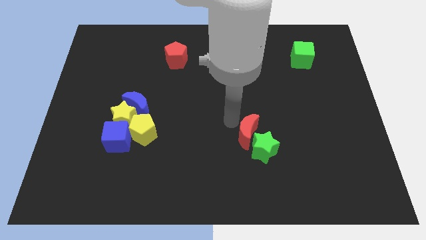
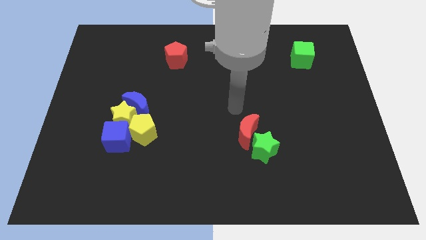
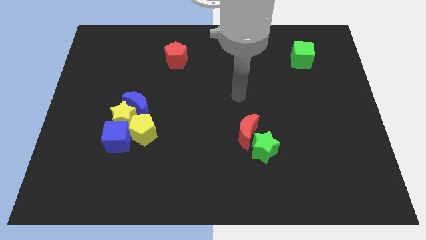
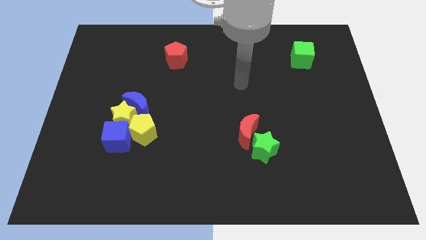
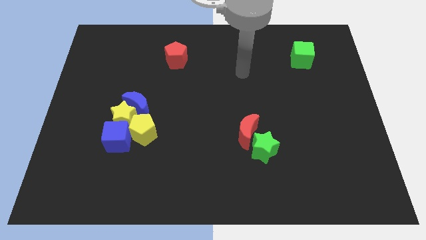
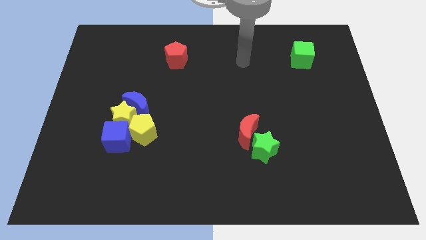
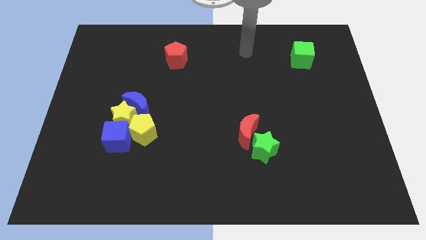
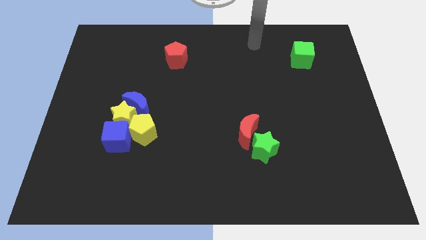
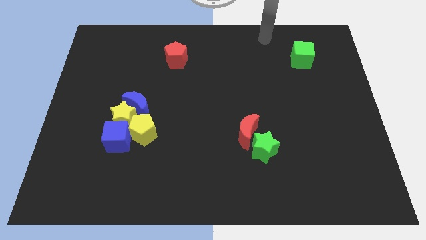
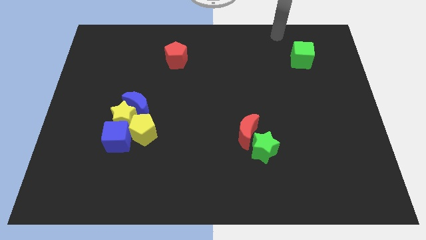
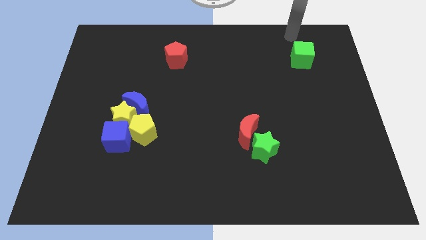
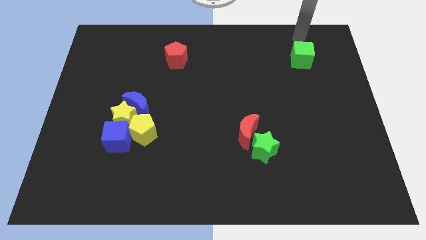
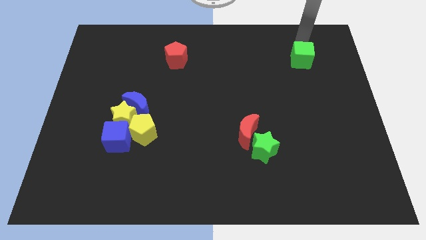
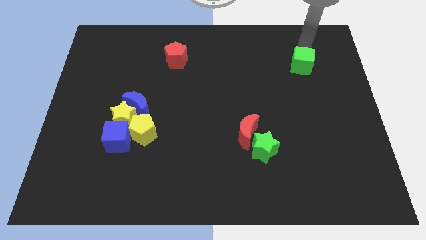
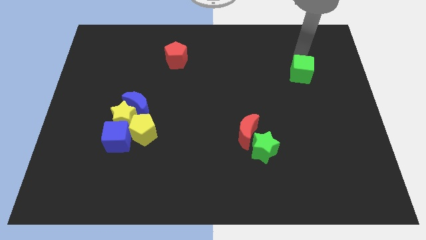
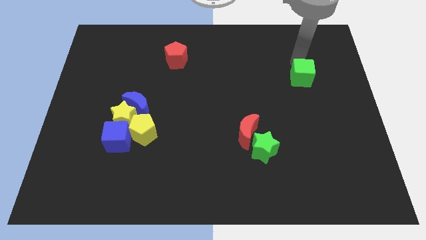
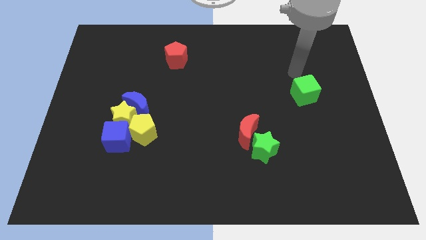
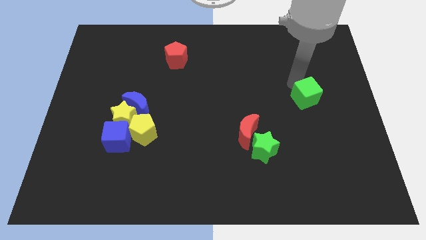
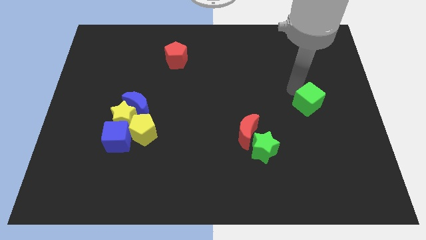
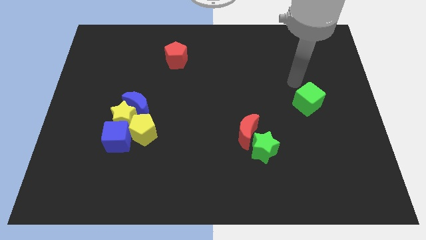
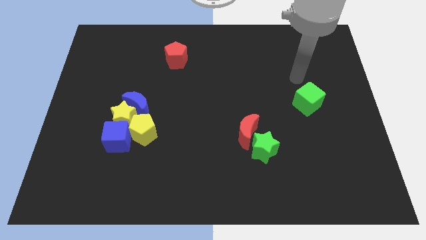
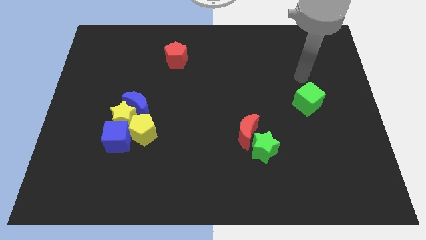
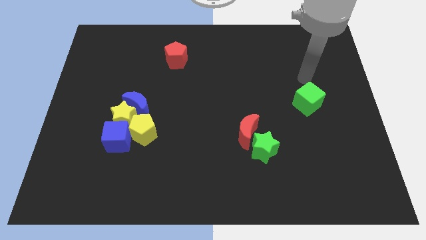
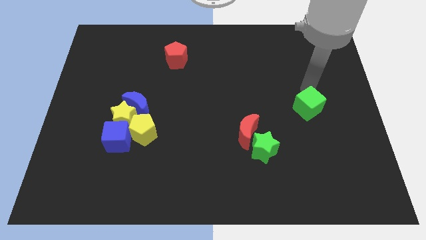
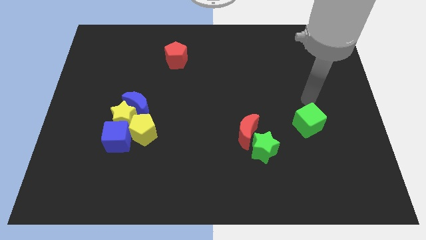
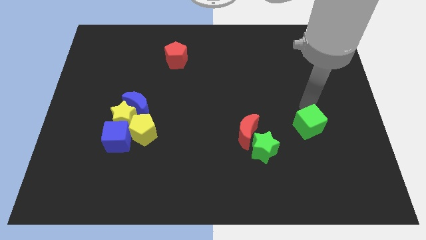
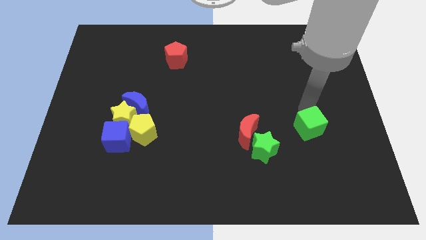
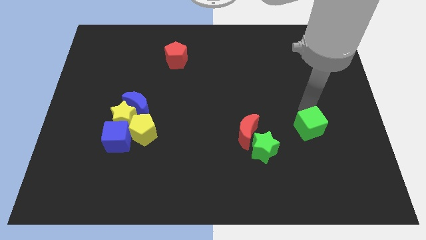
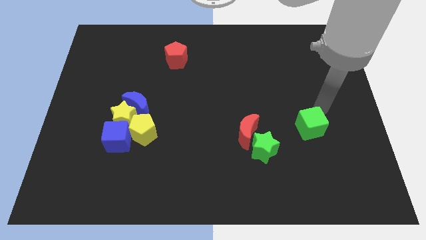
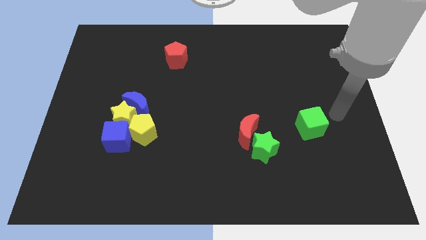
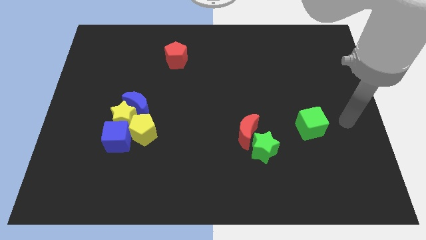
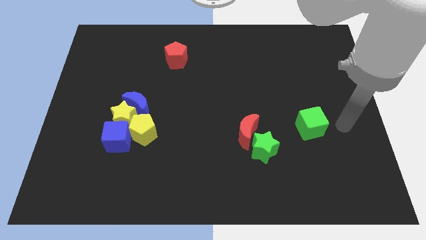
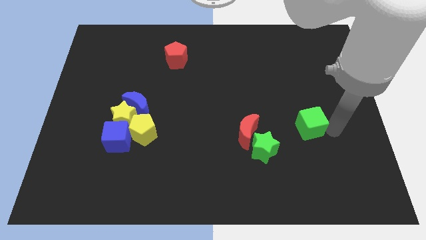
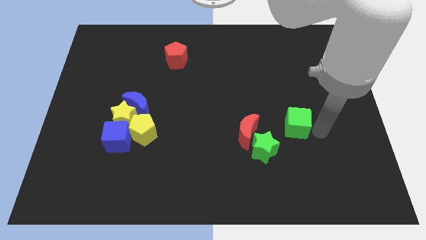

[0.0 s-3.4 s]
move the green cube towards the red moon and green star which is at bottom side

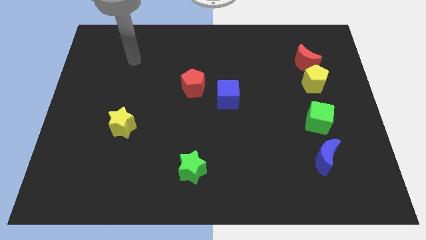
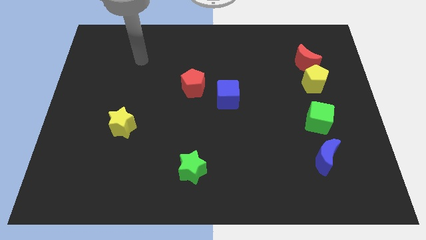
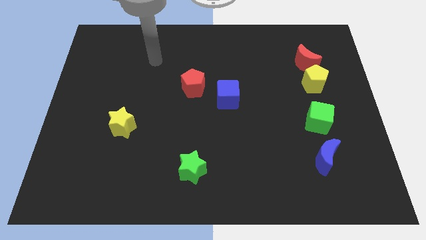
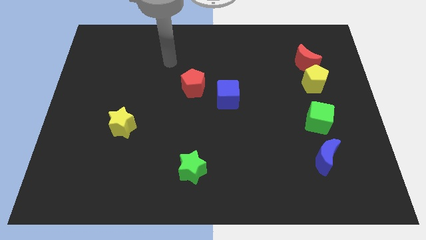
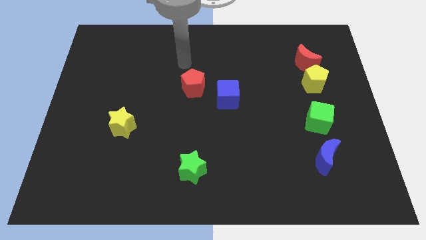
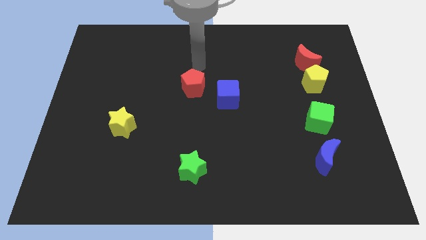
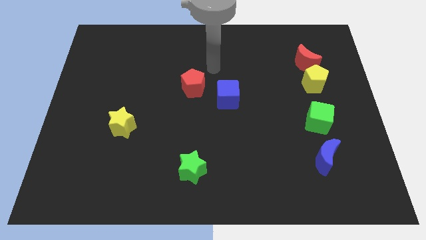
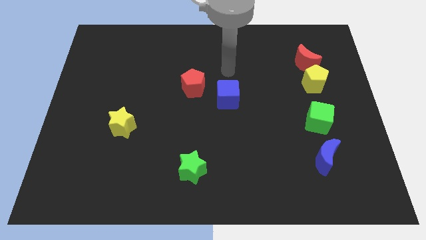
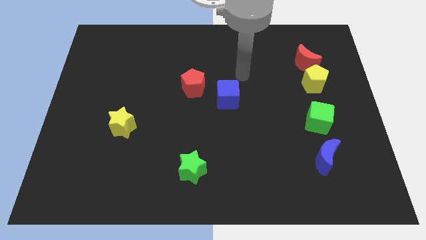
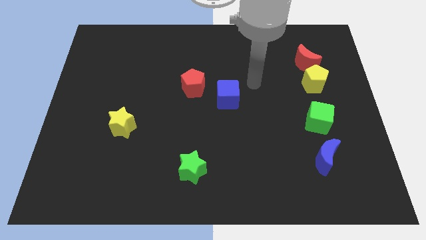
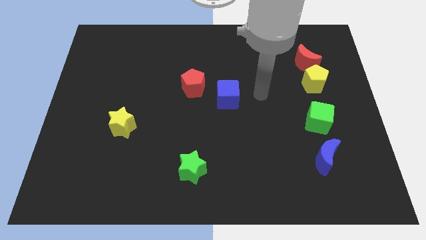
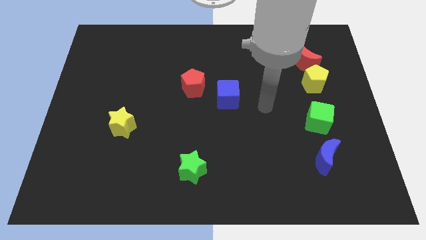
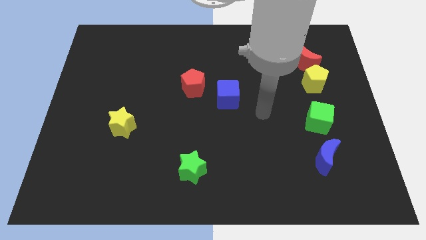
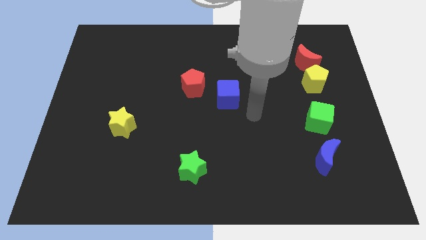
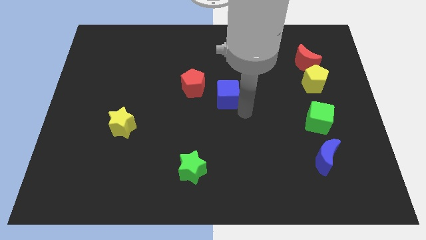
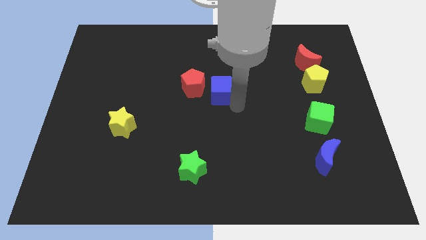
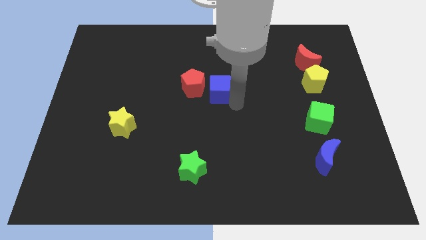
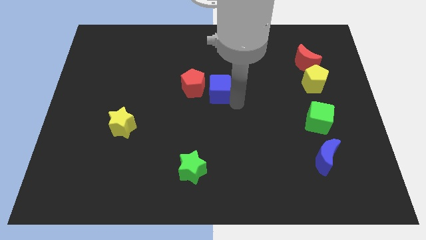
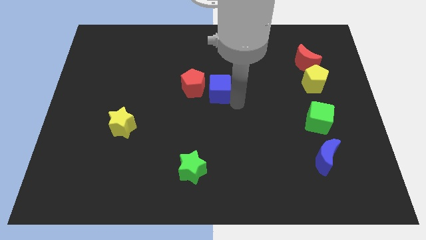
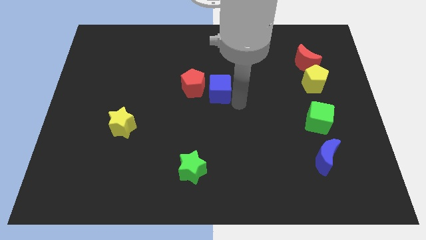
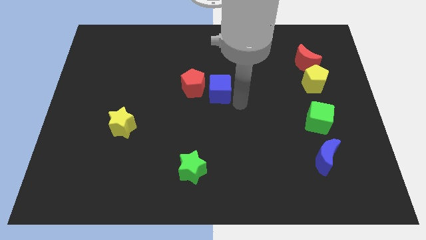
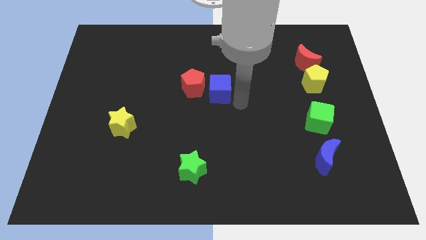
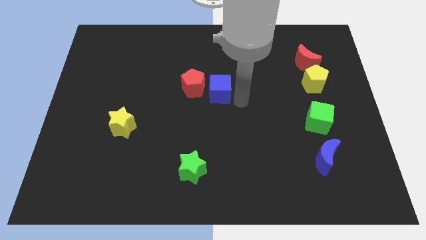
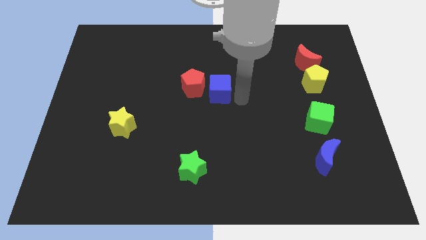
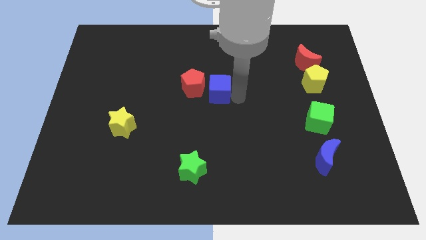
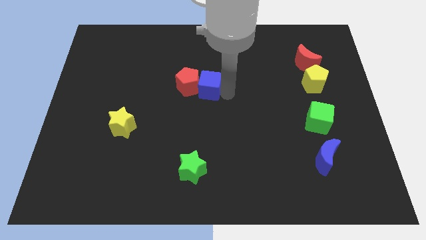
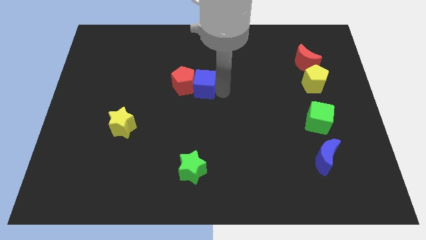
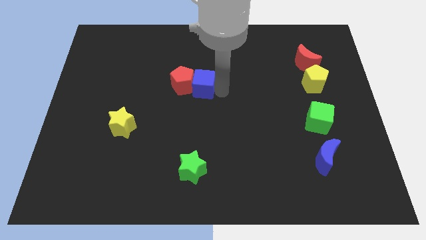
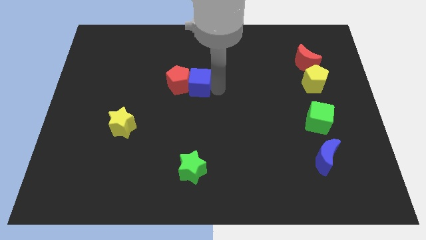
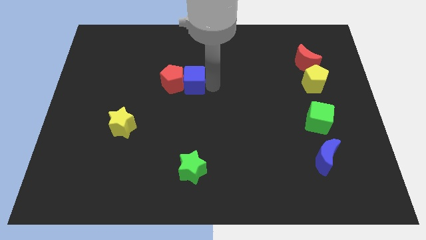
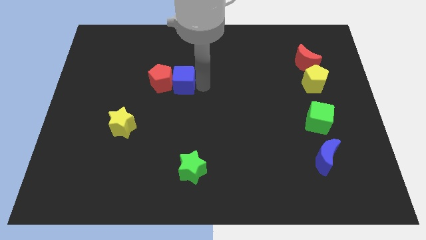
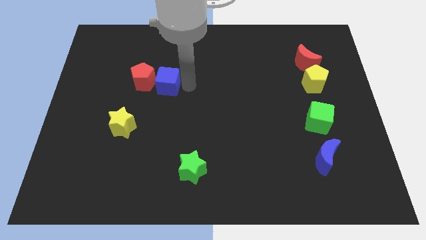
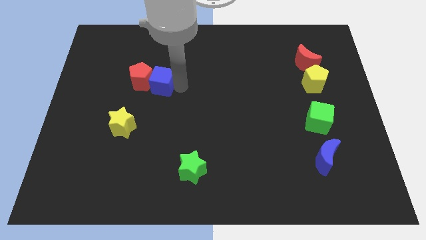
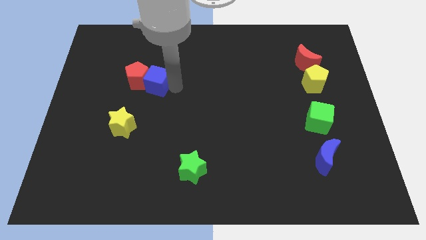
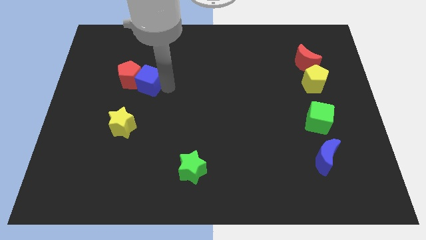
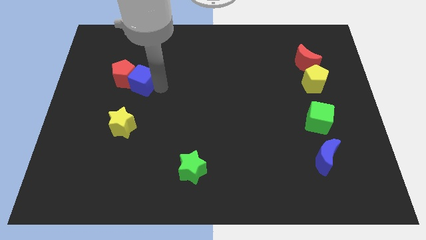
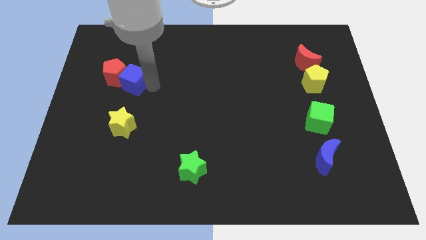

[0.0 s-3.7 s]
push the blue cube and red pentagon at the top of yellow star

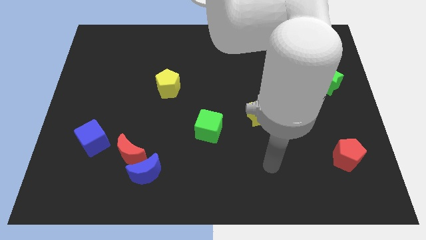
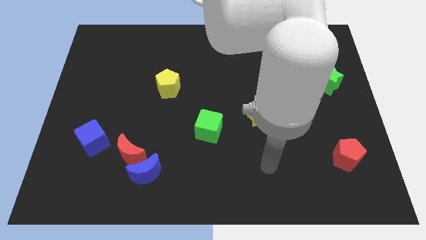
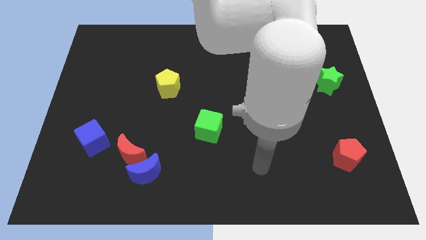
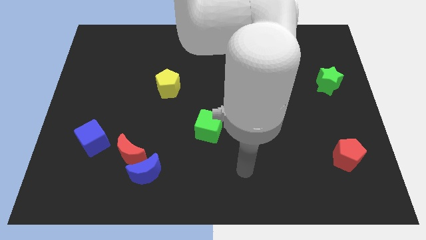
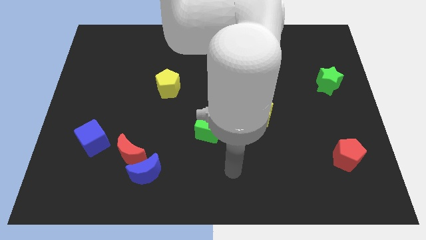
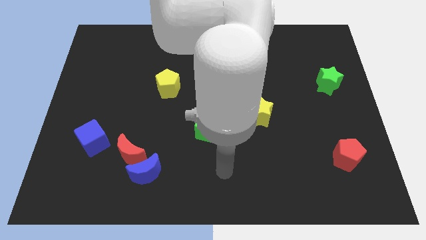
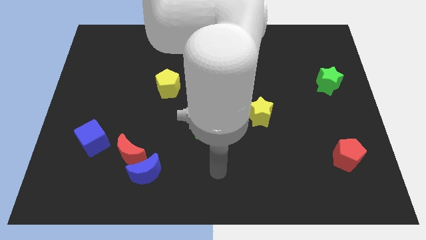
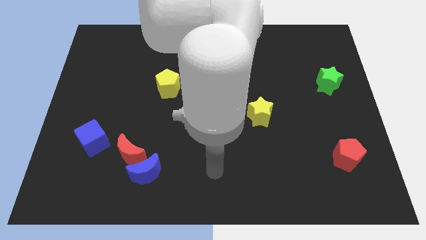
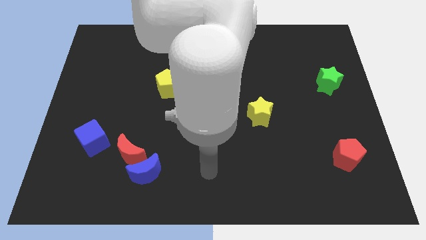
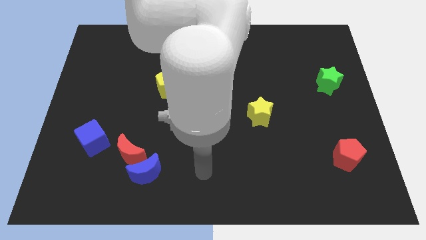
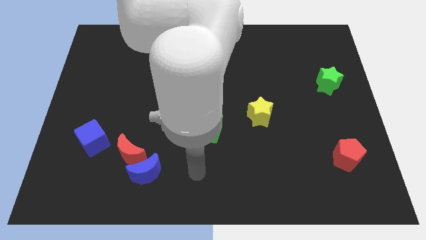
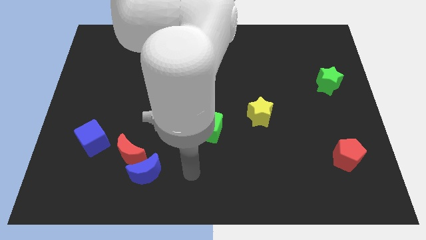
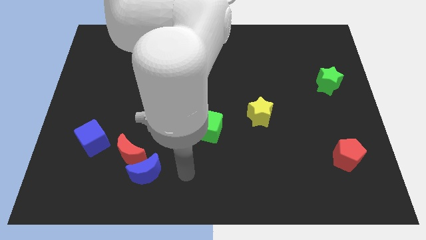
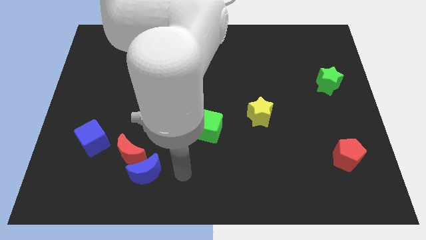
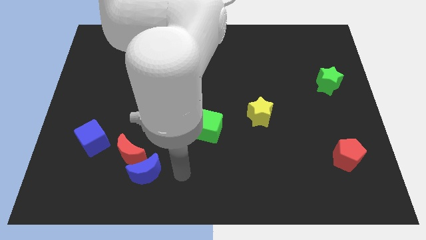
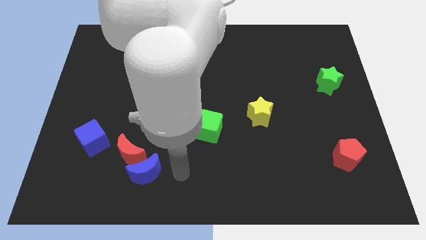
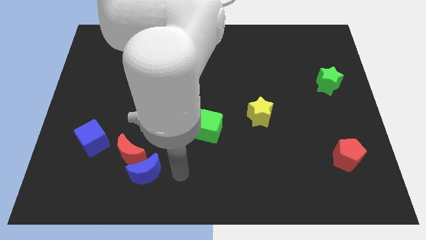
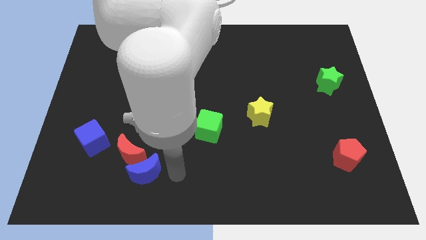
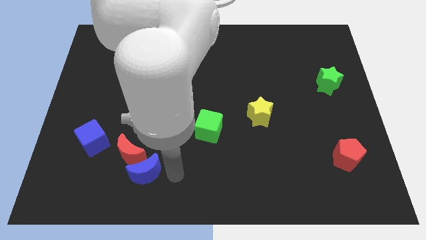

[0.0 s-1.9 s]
point your hand at the right side of the blue moon
